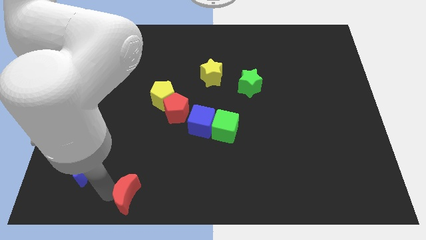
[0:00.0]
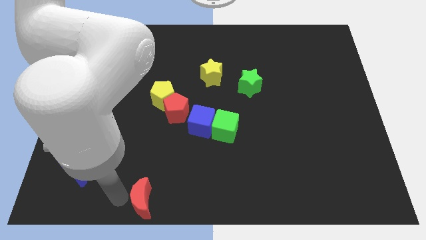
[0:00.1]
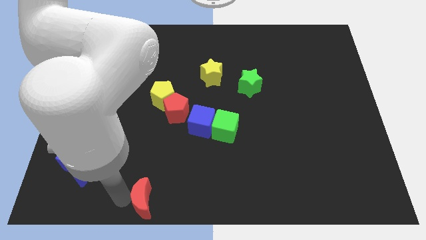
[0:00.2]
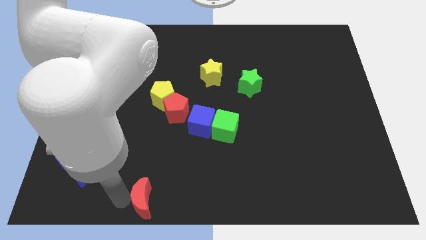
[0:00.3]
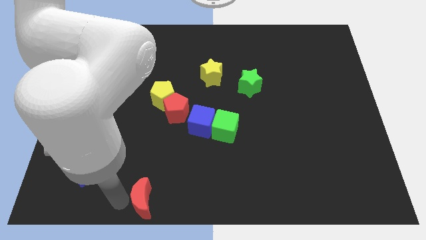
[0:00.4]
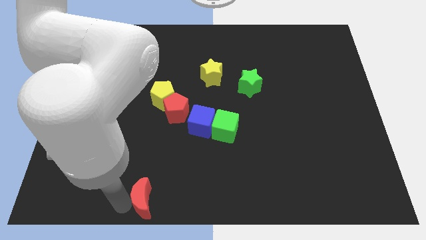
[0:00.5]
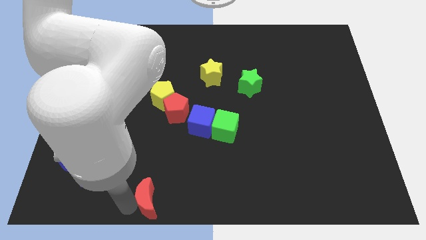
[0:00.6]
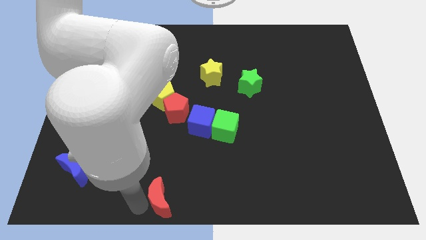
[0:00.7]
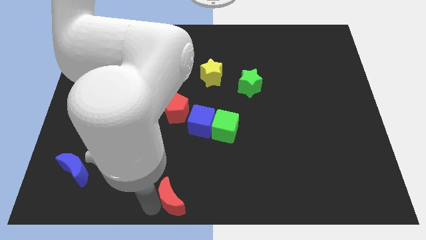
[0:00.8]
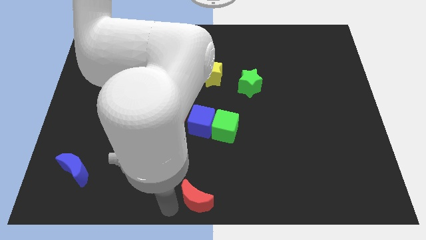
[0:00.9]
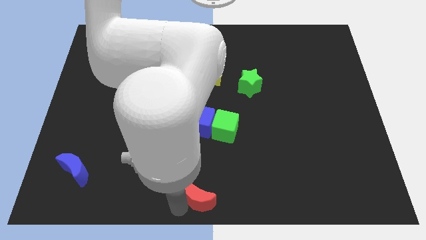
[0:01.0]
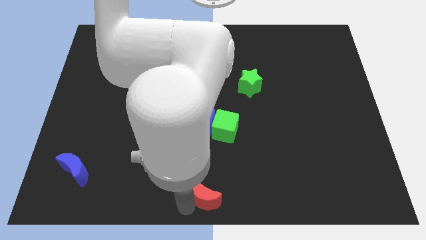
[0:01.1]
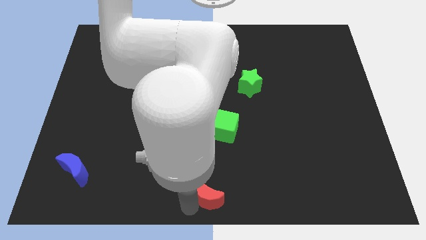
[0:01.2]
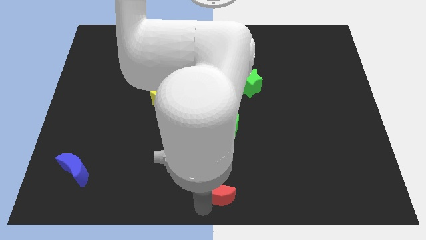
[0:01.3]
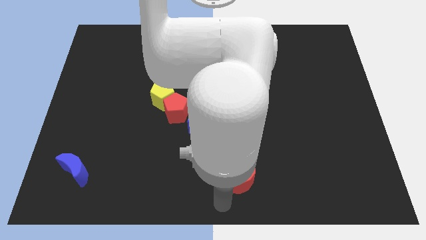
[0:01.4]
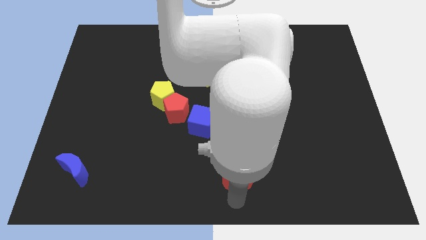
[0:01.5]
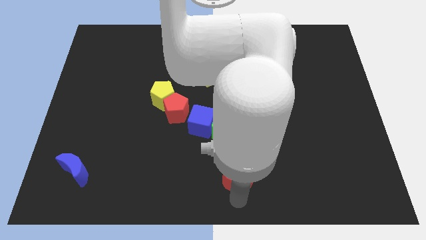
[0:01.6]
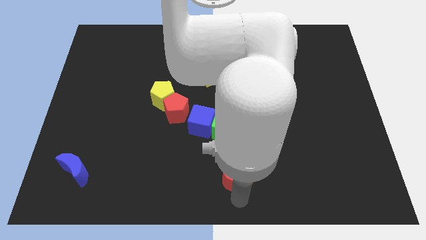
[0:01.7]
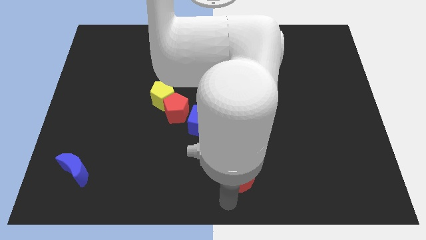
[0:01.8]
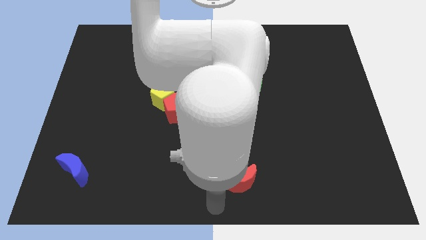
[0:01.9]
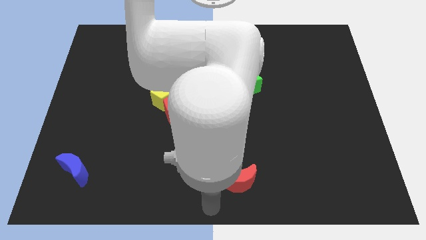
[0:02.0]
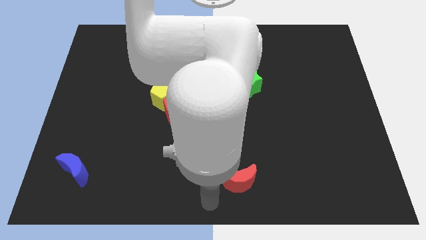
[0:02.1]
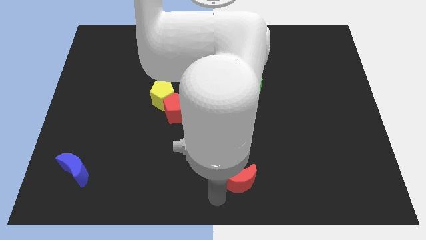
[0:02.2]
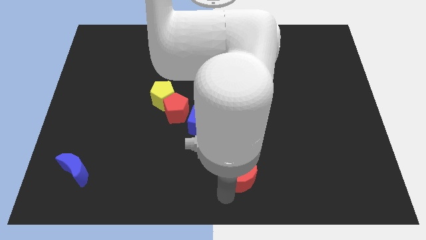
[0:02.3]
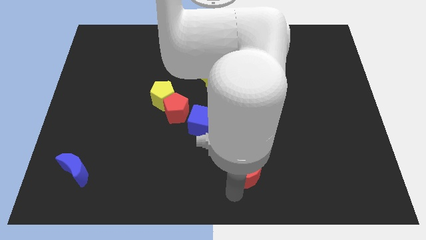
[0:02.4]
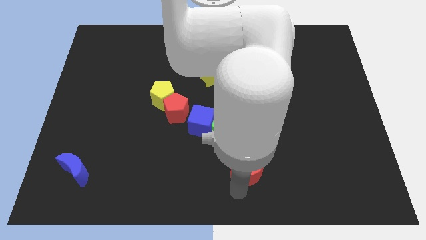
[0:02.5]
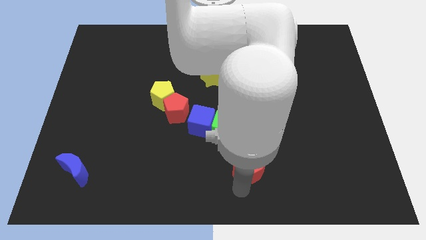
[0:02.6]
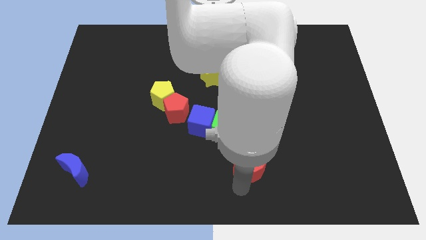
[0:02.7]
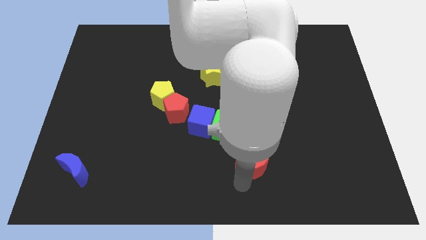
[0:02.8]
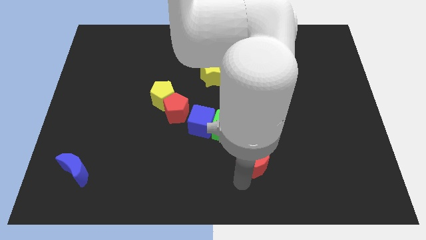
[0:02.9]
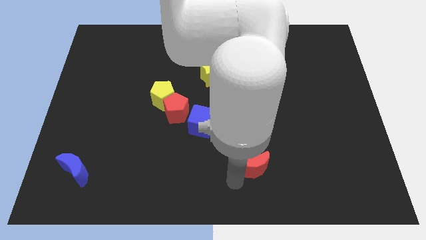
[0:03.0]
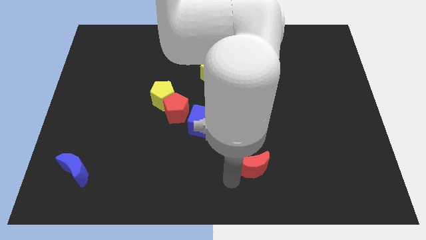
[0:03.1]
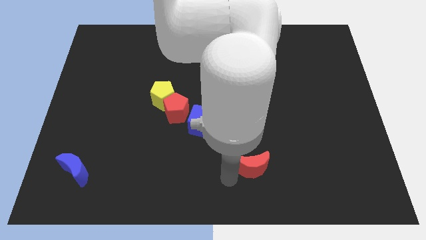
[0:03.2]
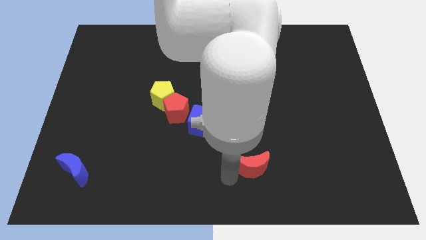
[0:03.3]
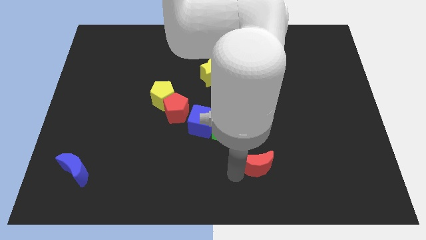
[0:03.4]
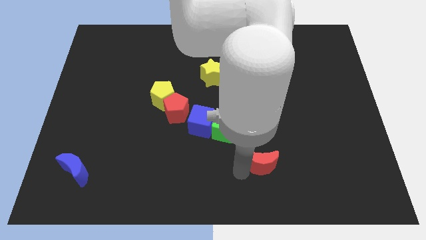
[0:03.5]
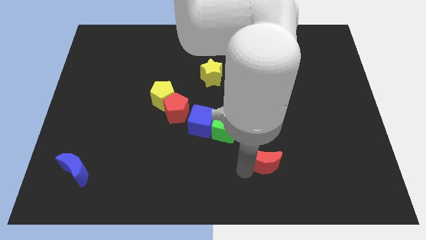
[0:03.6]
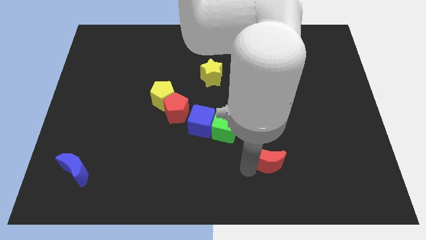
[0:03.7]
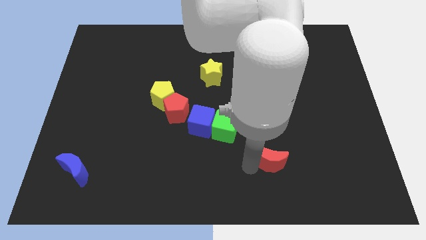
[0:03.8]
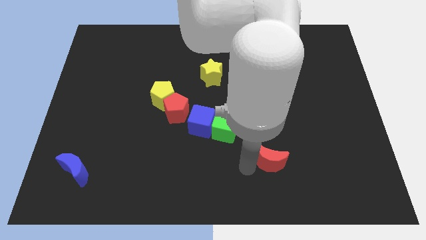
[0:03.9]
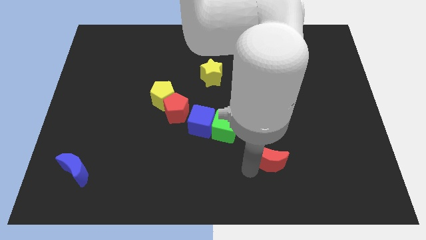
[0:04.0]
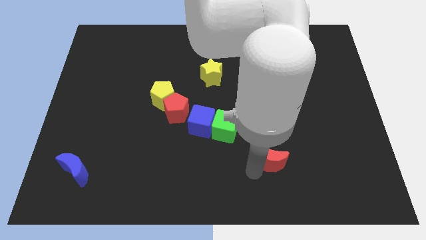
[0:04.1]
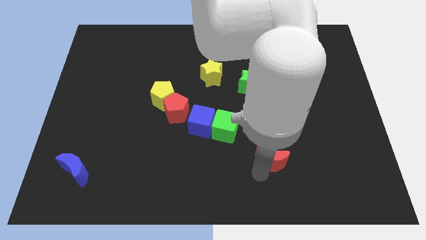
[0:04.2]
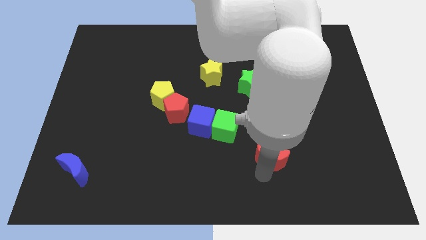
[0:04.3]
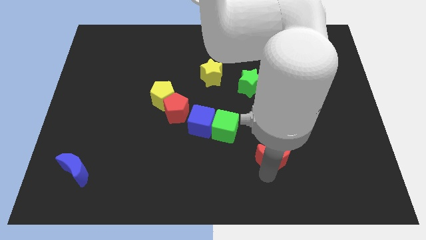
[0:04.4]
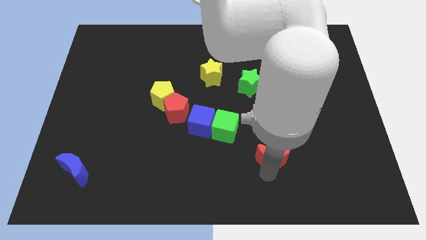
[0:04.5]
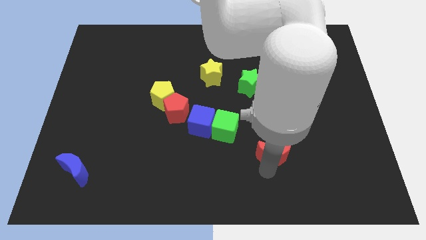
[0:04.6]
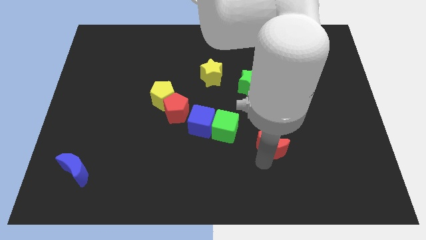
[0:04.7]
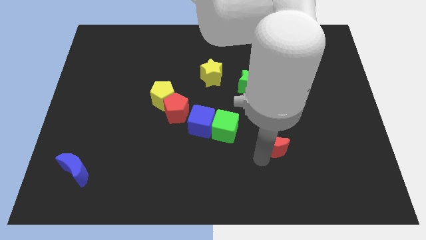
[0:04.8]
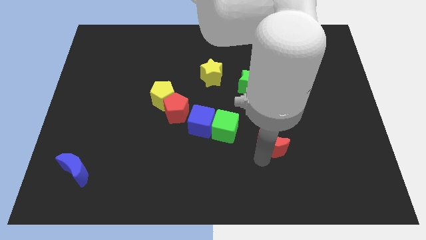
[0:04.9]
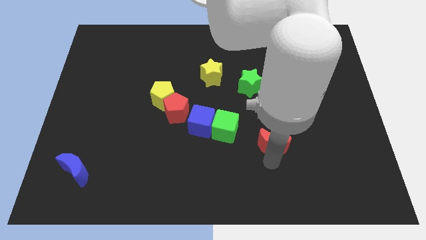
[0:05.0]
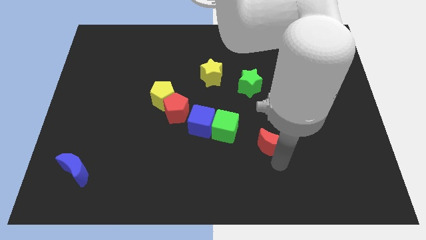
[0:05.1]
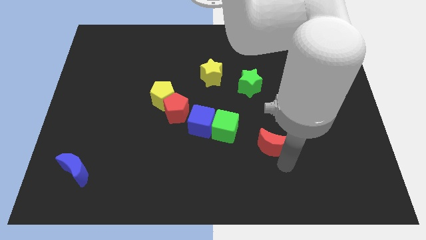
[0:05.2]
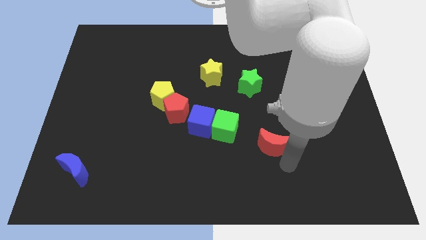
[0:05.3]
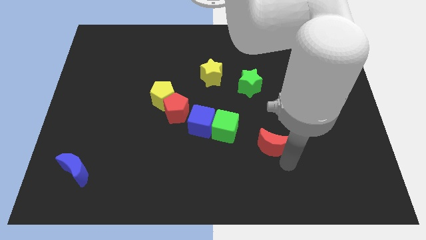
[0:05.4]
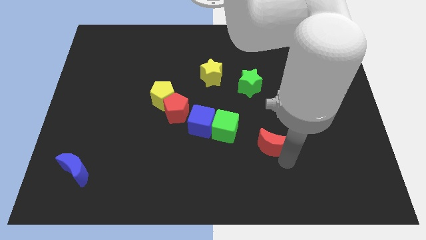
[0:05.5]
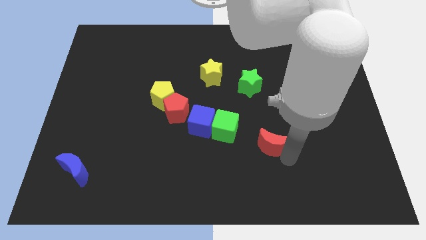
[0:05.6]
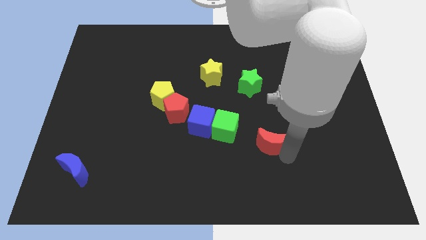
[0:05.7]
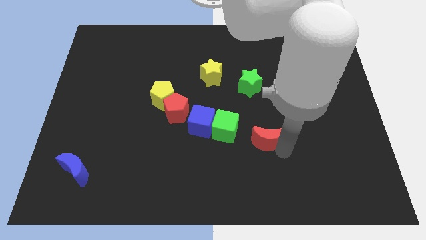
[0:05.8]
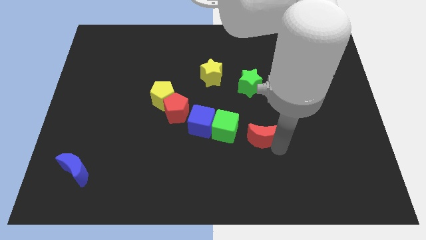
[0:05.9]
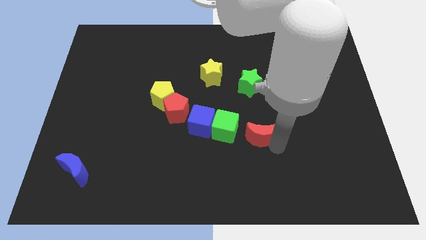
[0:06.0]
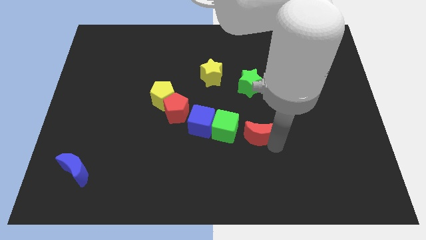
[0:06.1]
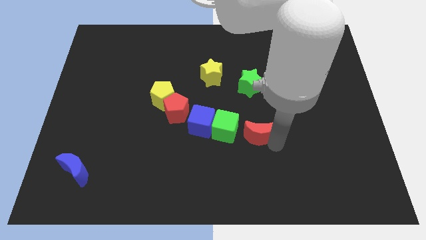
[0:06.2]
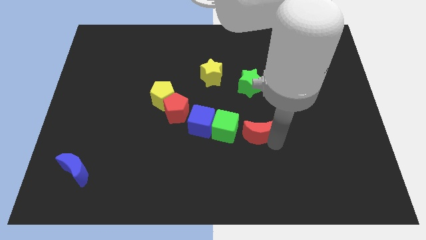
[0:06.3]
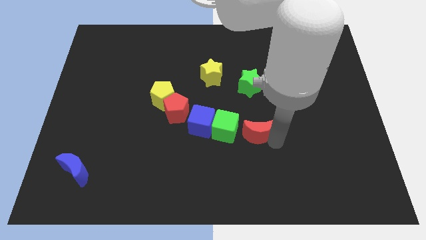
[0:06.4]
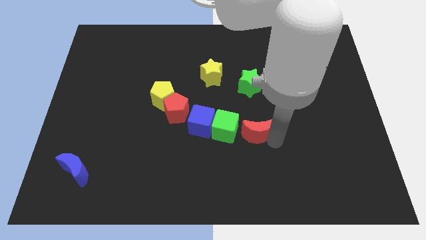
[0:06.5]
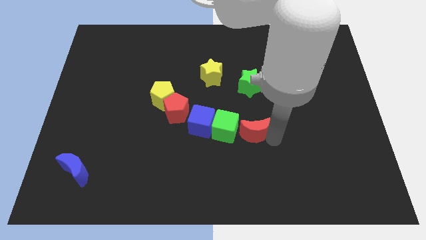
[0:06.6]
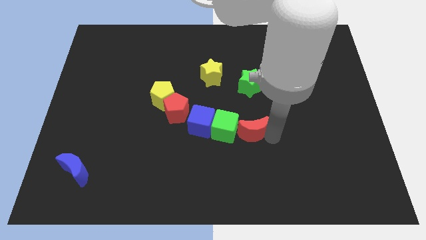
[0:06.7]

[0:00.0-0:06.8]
push the red moon parallel right to the green cube

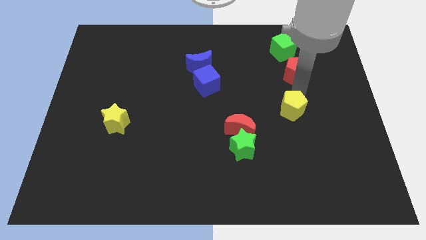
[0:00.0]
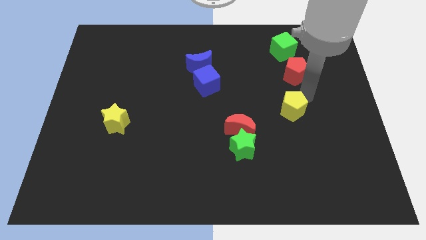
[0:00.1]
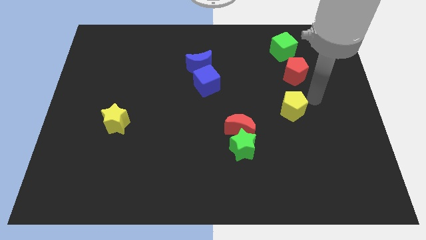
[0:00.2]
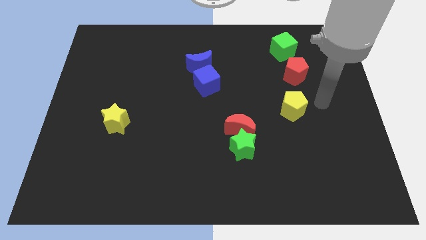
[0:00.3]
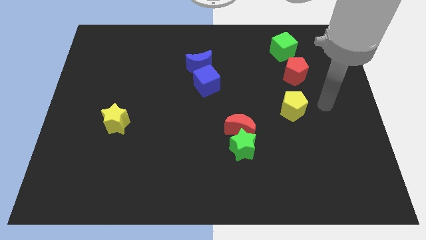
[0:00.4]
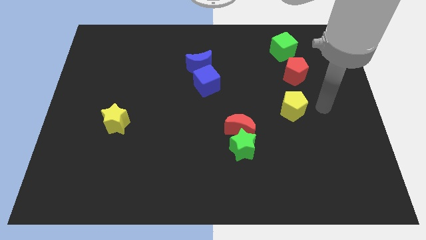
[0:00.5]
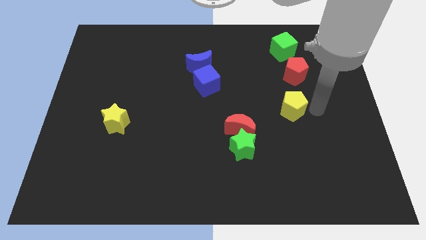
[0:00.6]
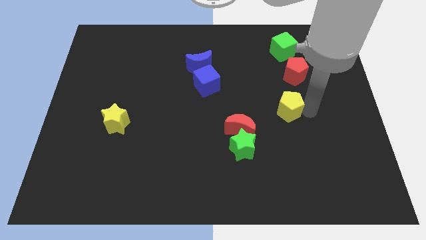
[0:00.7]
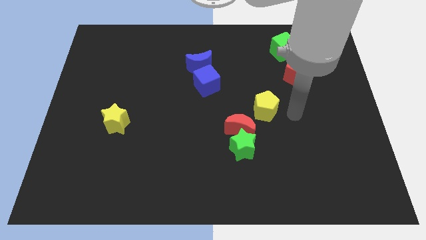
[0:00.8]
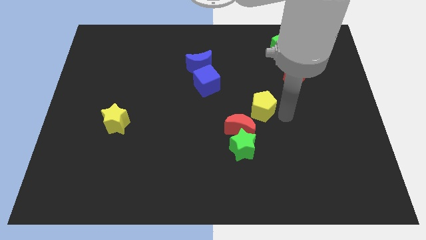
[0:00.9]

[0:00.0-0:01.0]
place the yellow pentagon between red moon and red pentagon

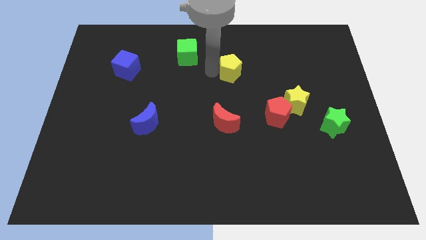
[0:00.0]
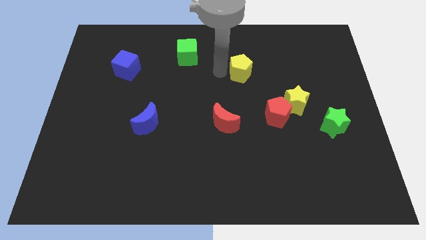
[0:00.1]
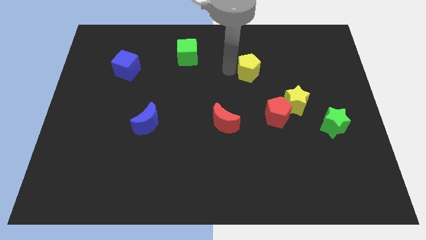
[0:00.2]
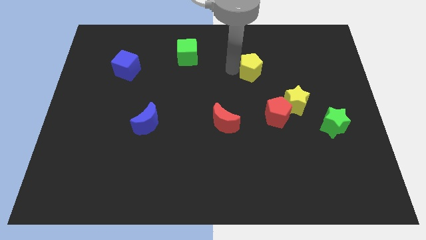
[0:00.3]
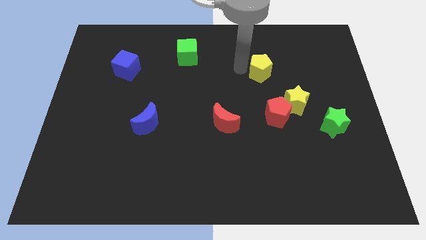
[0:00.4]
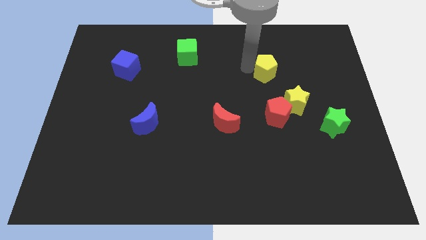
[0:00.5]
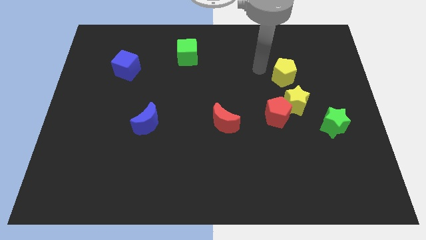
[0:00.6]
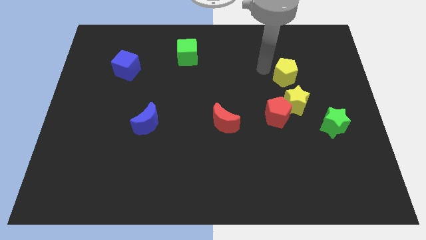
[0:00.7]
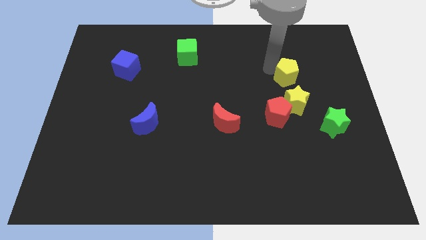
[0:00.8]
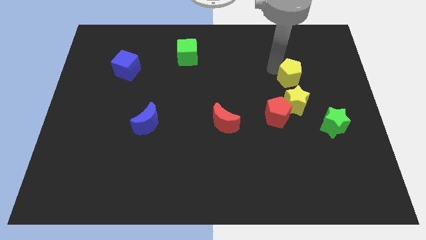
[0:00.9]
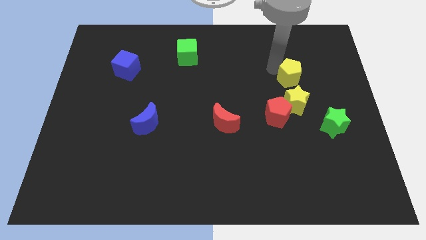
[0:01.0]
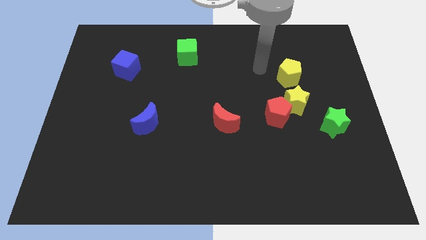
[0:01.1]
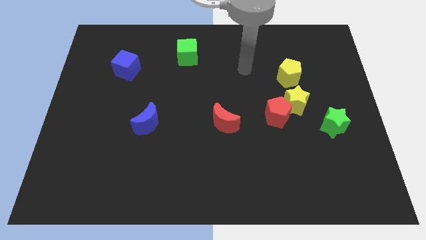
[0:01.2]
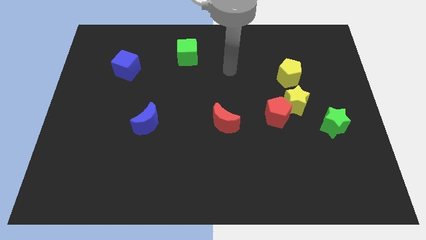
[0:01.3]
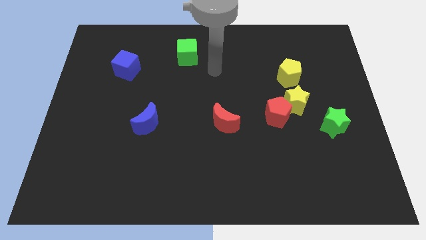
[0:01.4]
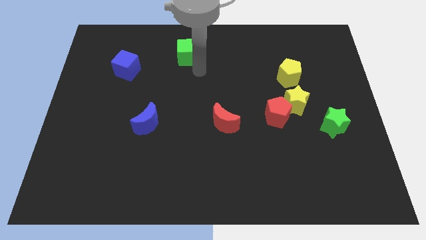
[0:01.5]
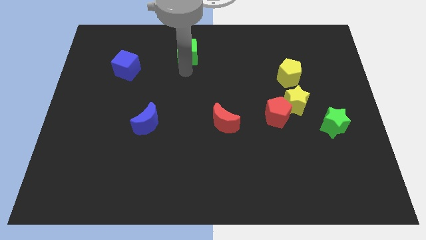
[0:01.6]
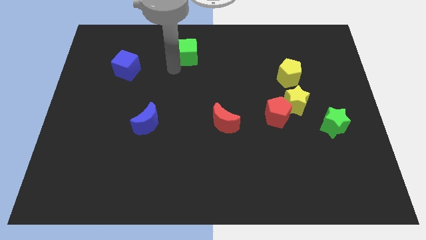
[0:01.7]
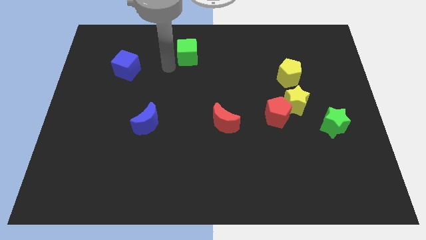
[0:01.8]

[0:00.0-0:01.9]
place the yellow pentagon above the yellow star
